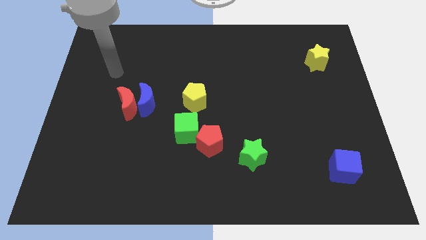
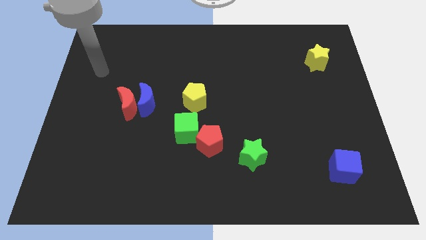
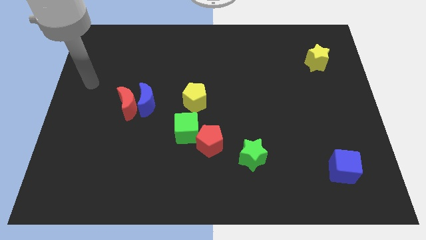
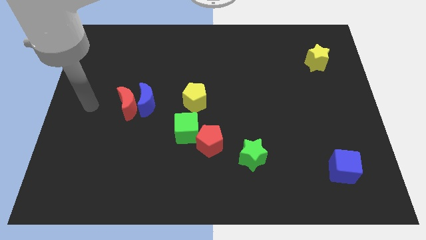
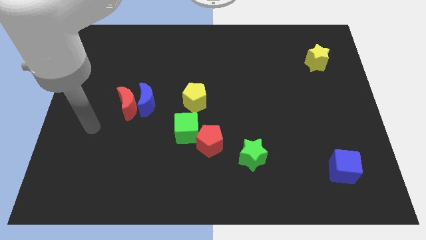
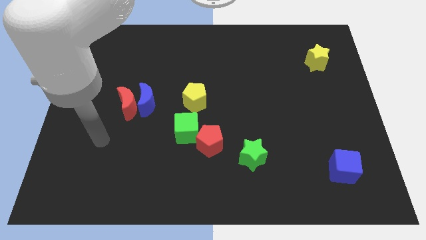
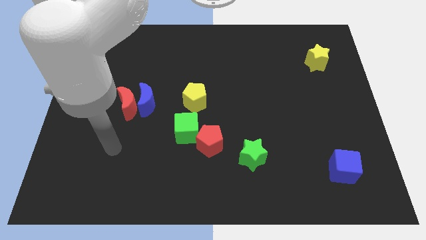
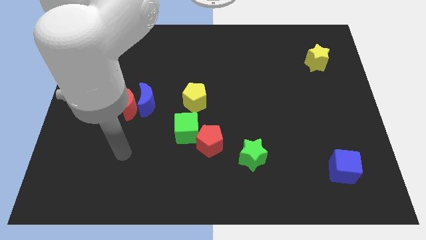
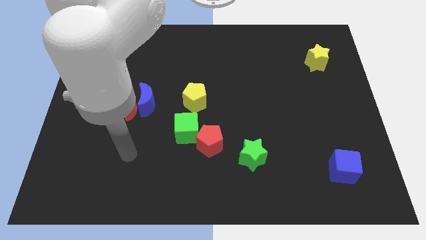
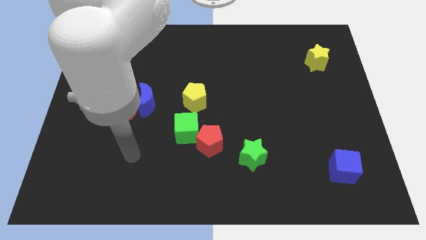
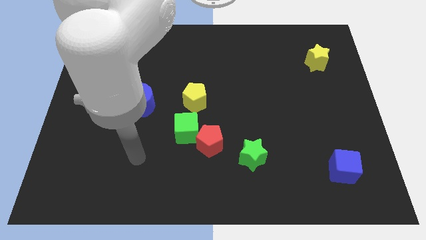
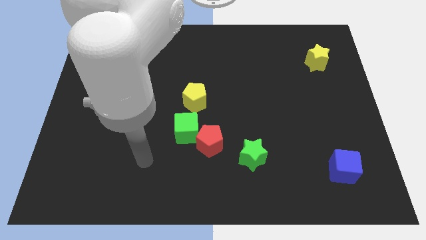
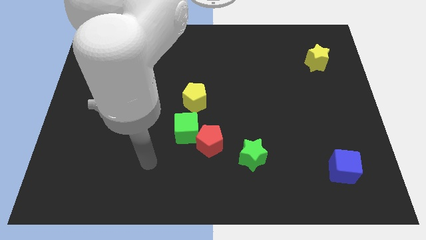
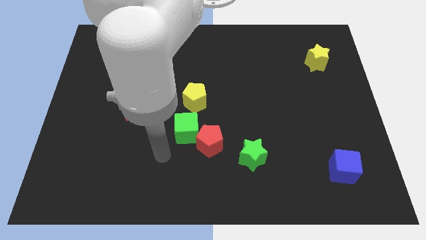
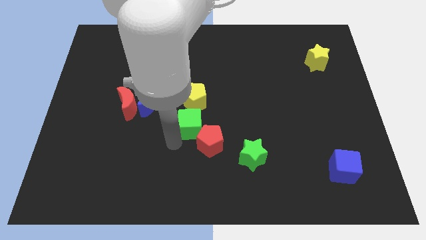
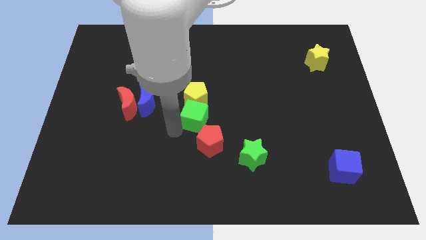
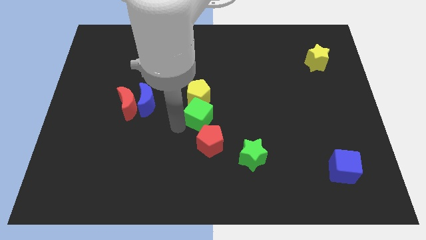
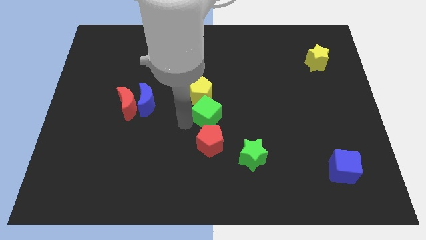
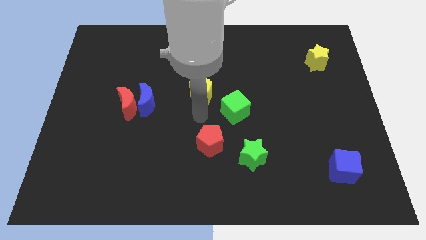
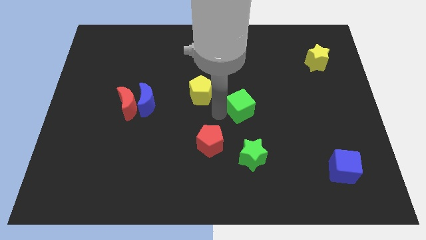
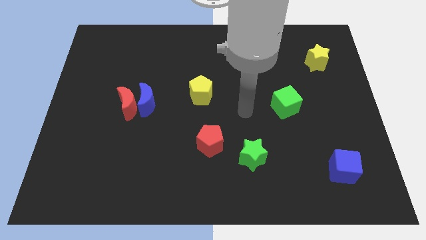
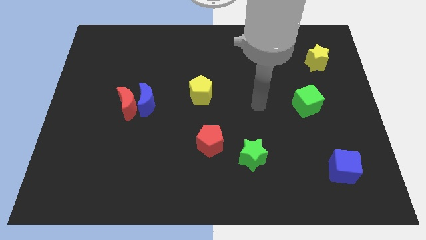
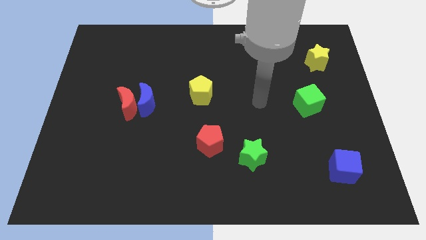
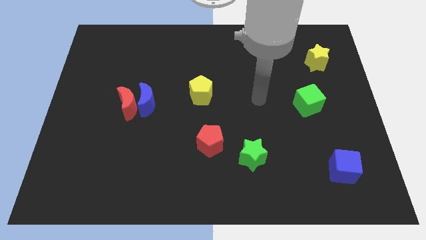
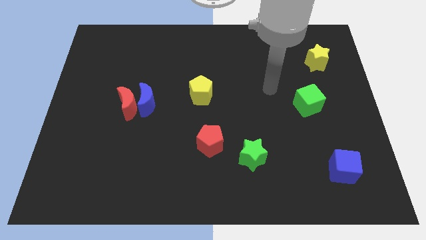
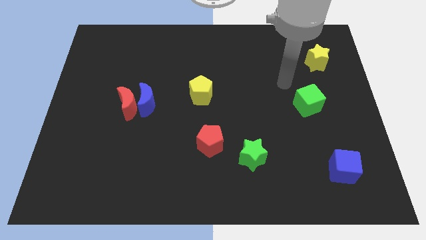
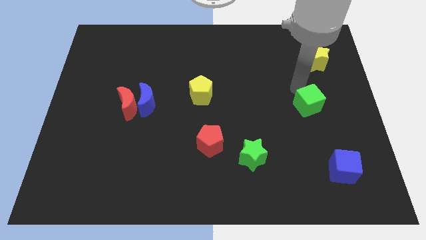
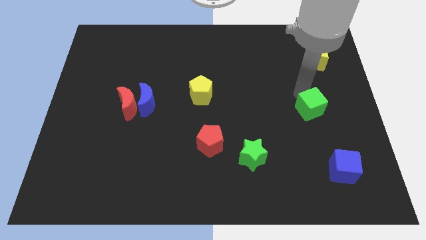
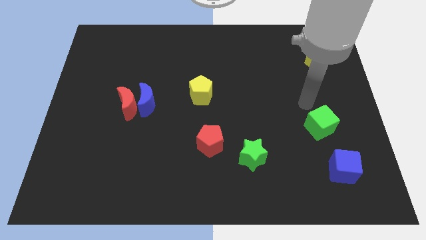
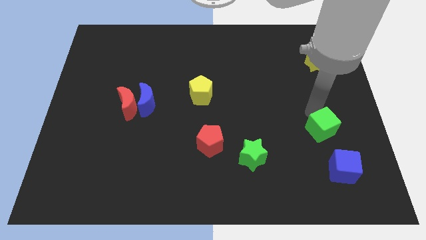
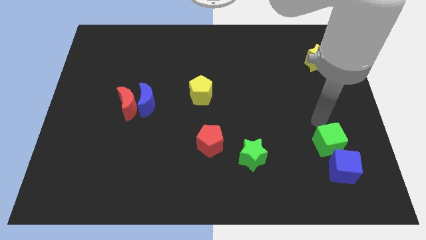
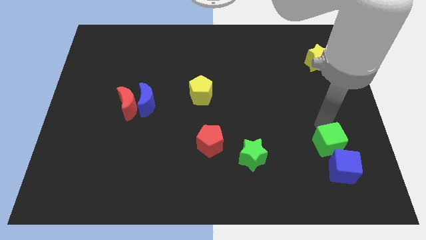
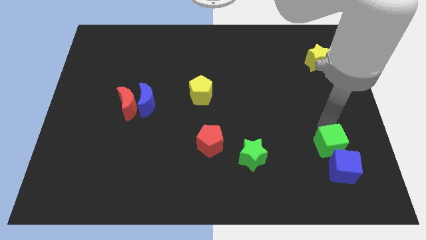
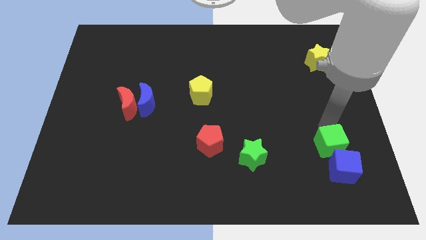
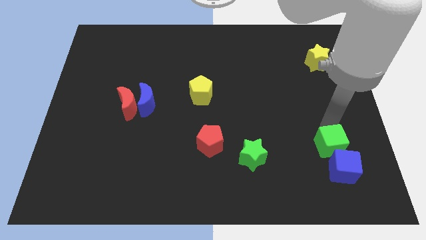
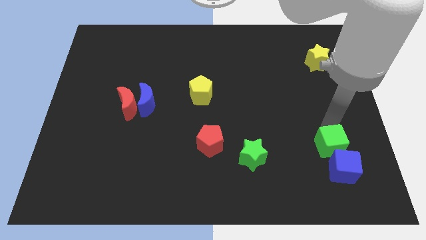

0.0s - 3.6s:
push the green cube to the blue cube

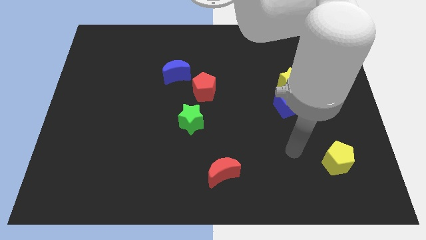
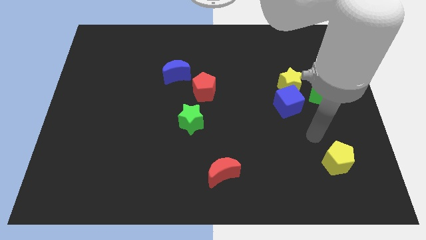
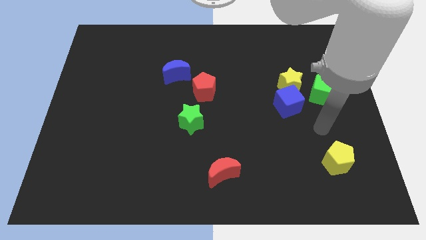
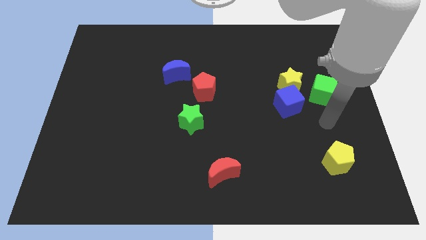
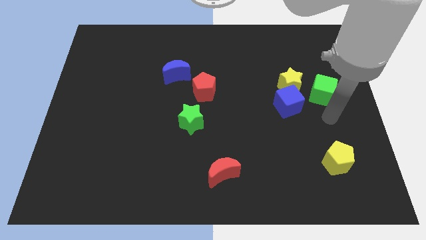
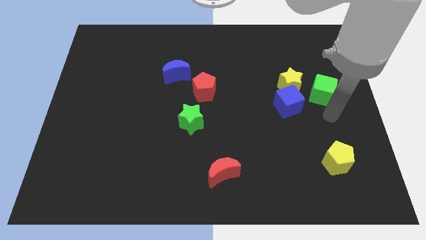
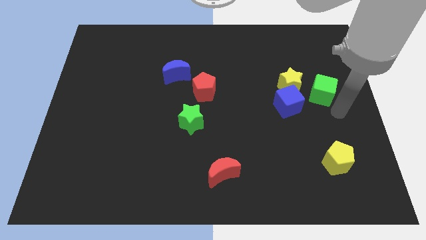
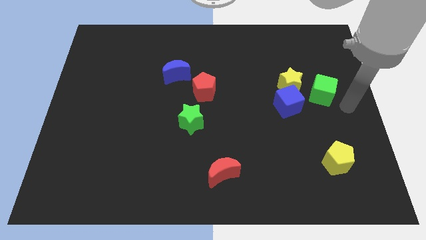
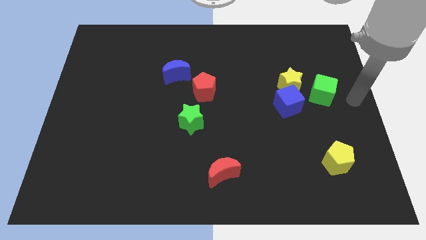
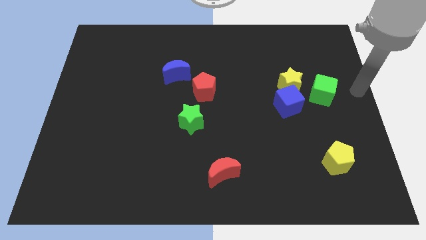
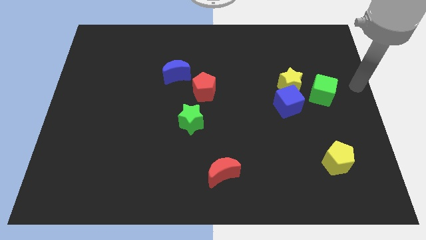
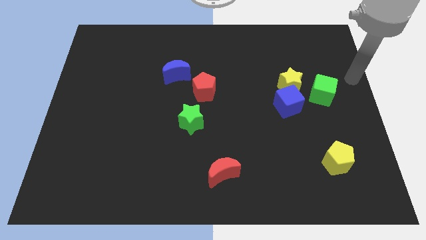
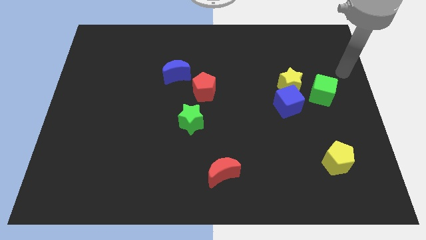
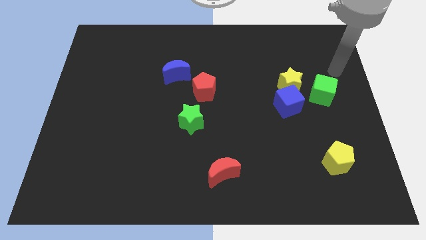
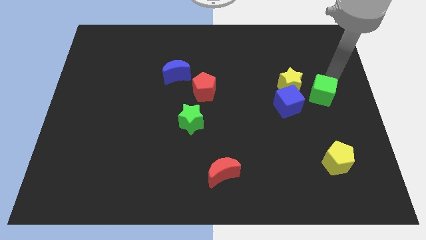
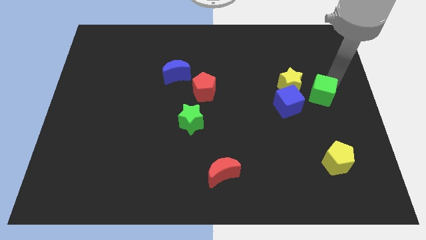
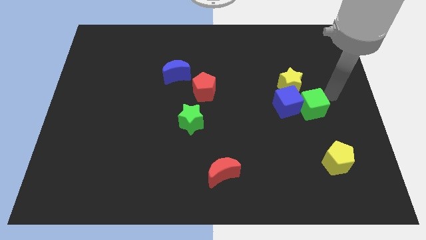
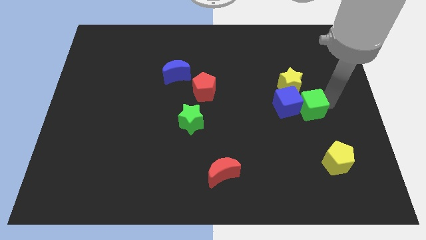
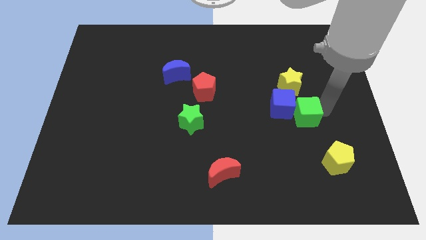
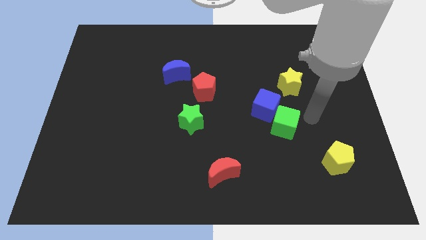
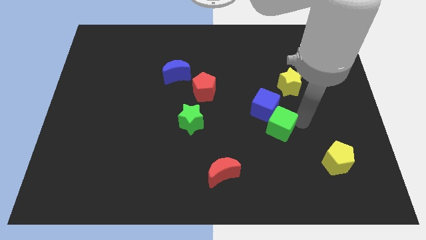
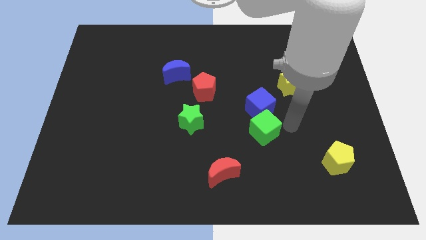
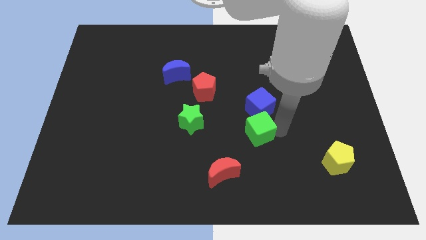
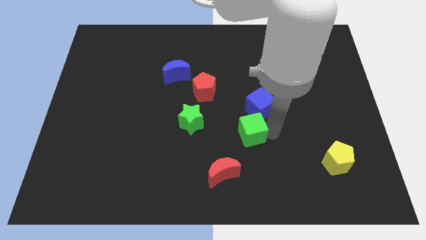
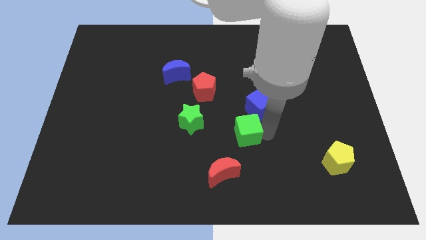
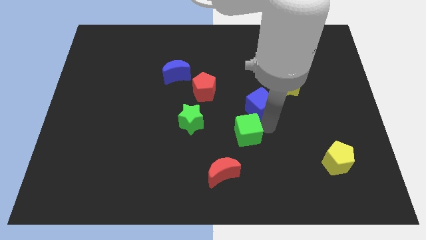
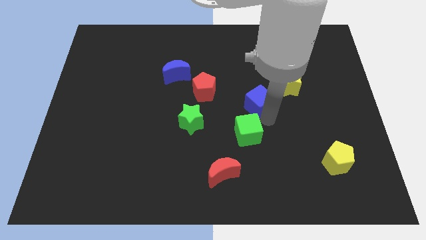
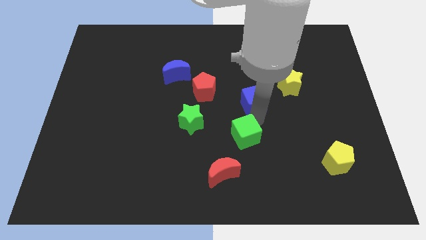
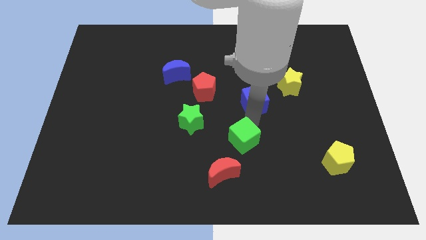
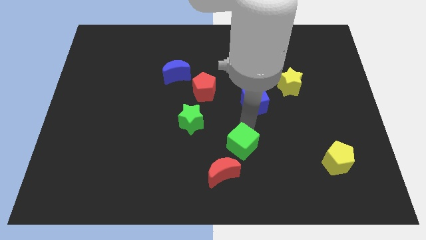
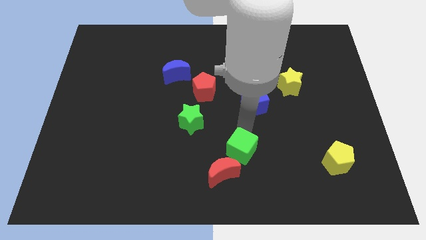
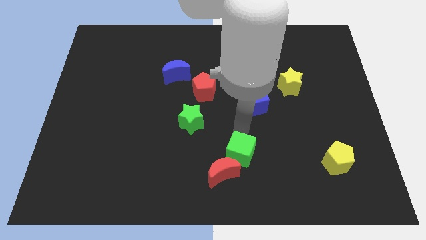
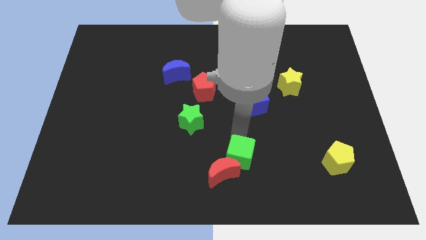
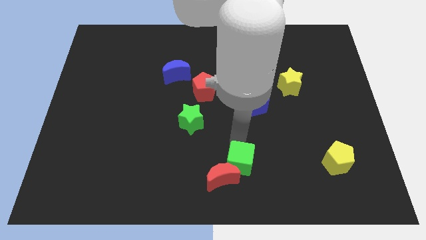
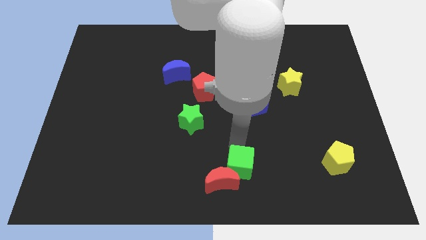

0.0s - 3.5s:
push the green cube close to the red moon

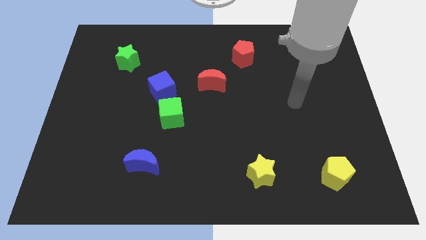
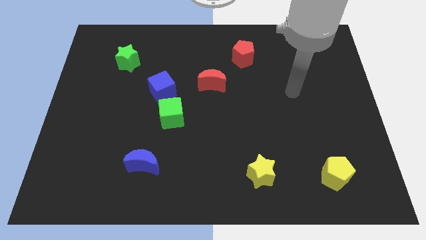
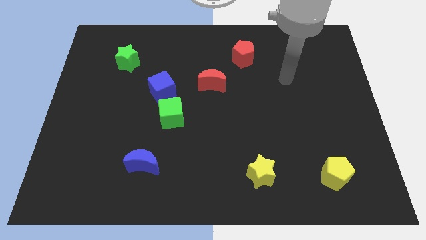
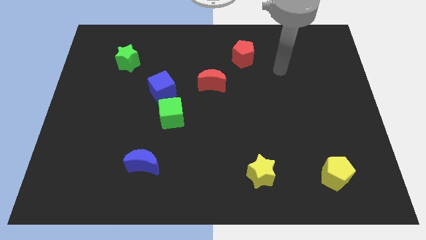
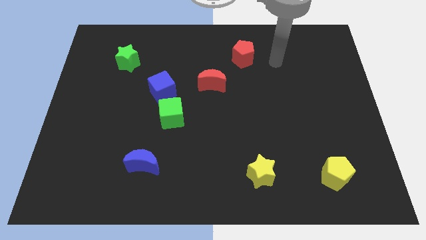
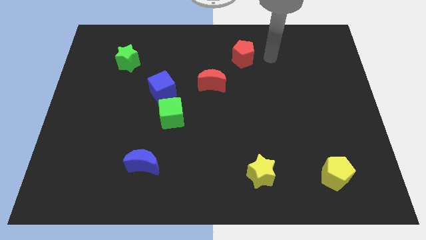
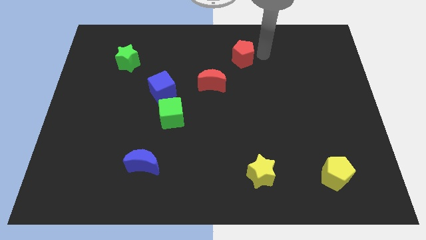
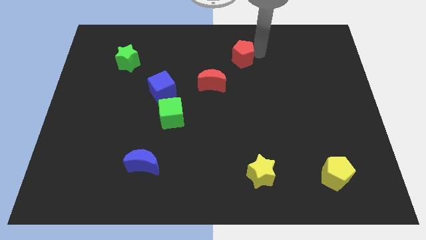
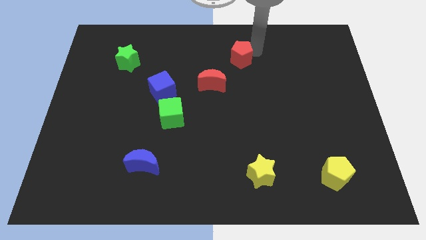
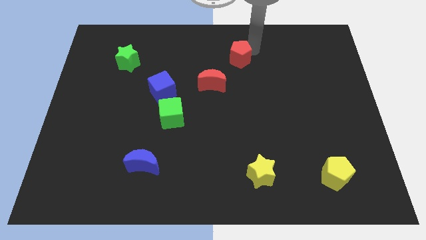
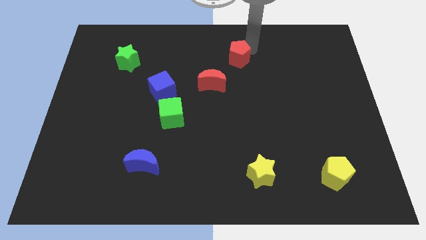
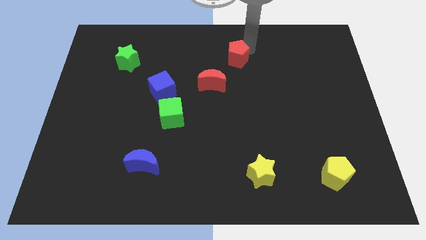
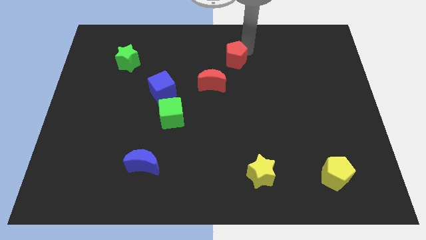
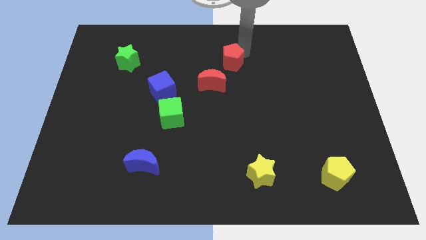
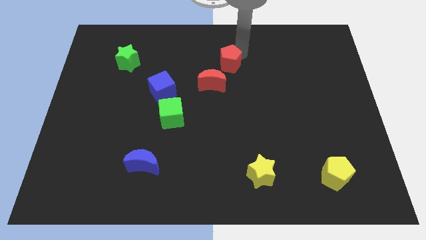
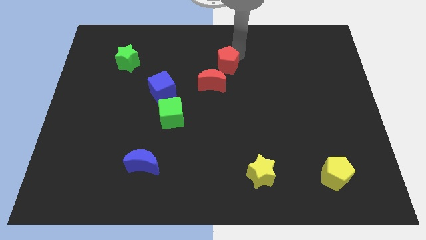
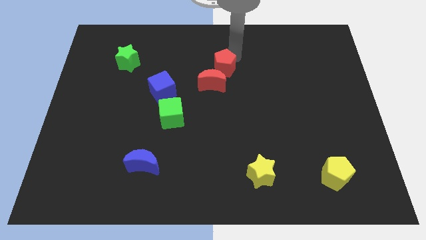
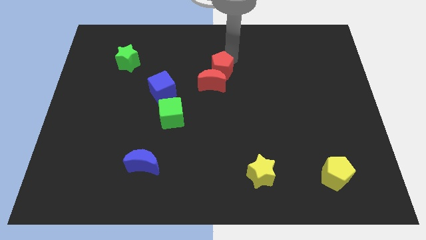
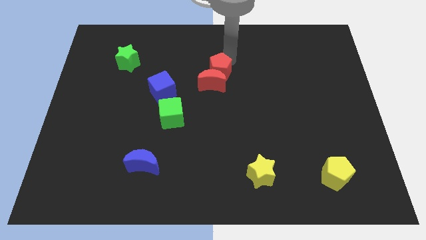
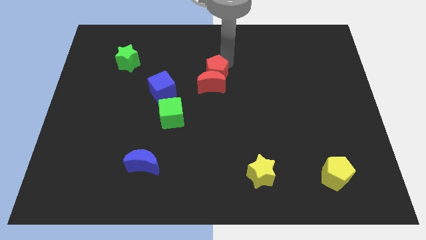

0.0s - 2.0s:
move the red pentagon towards the red moon
